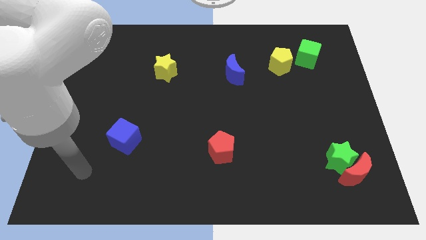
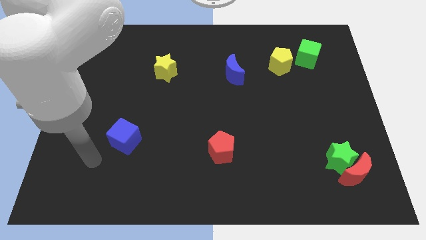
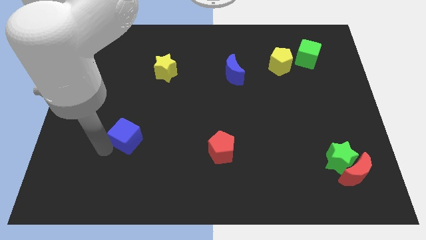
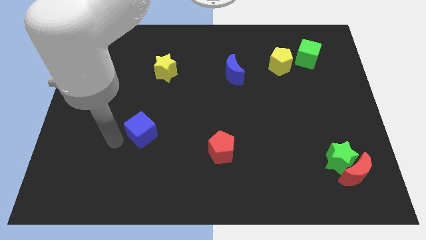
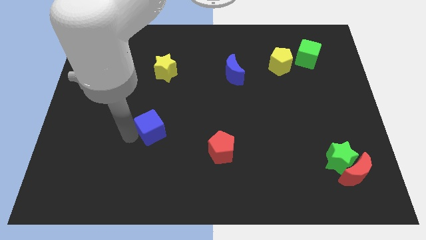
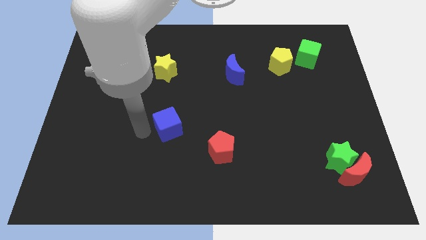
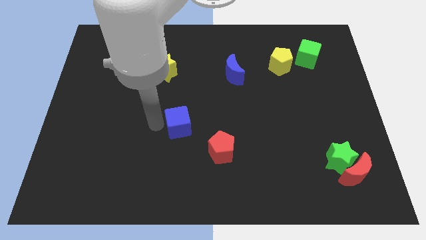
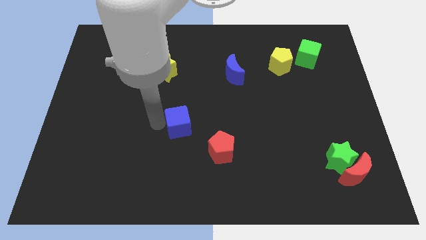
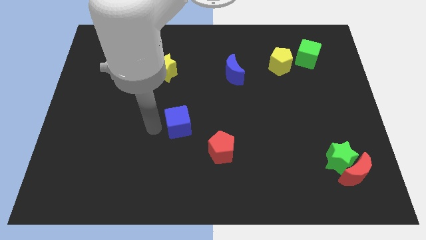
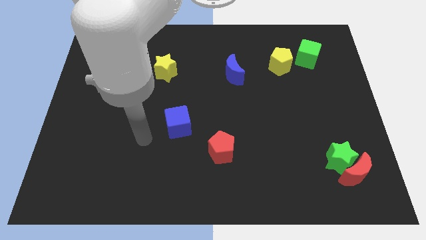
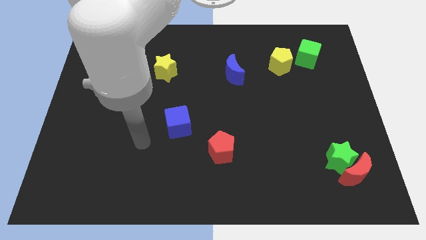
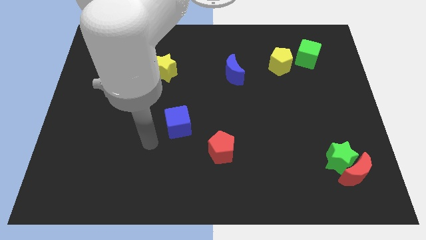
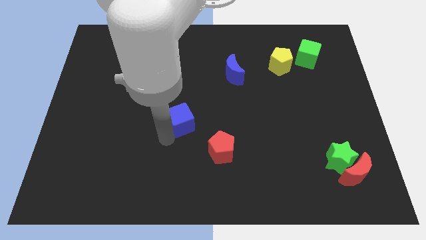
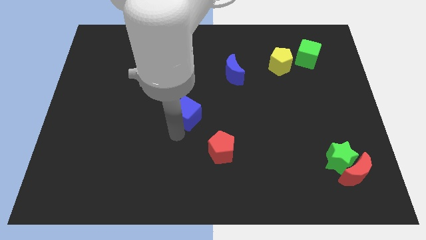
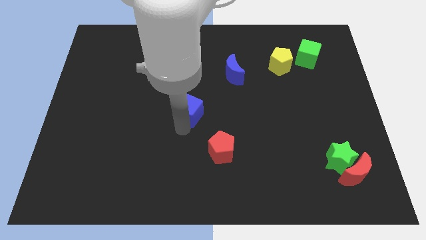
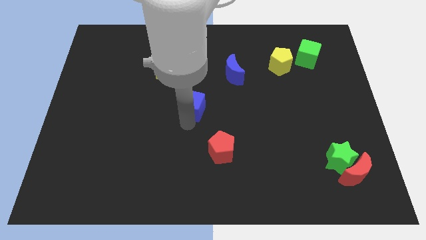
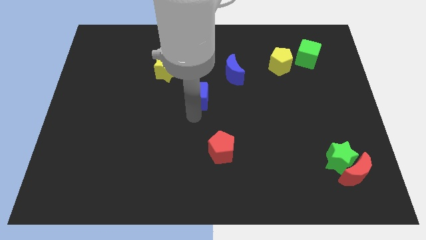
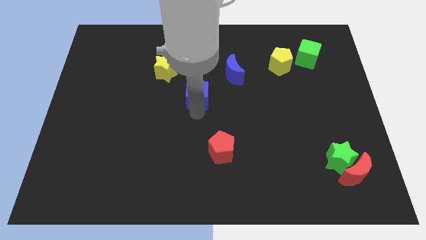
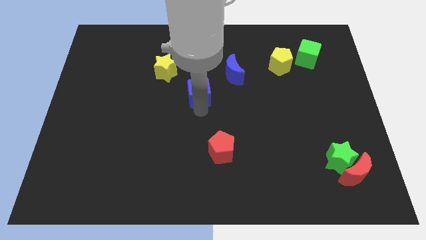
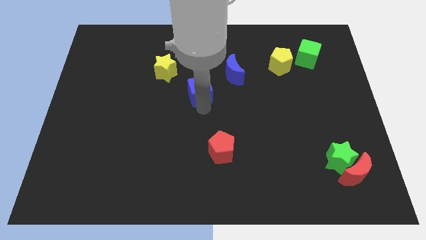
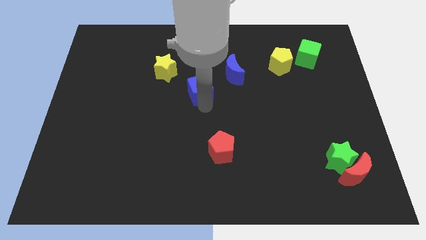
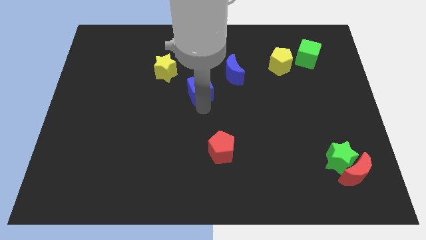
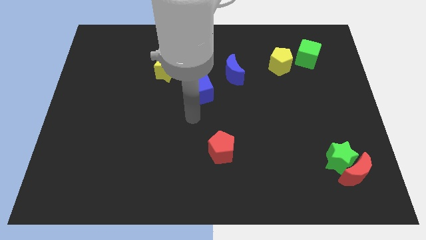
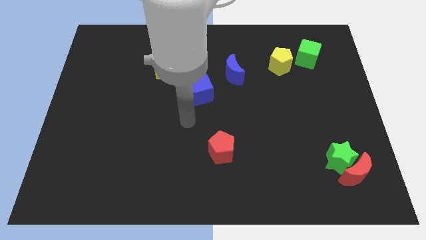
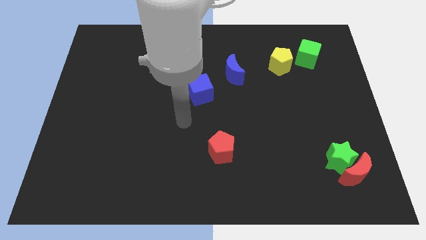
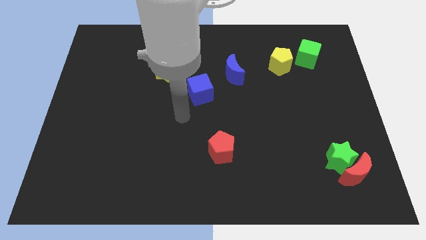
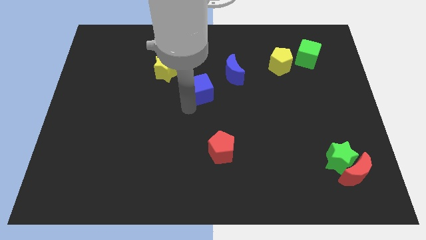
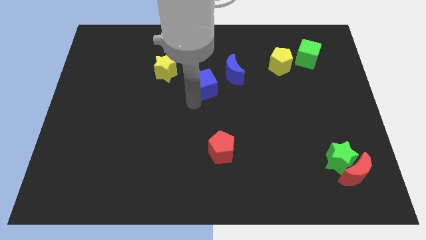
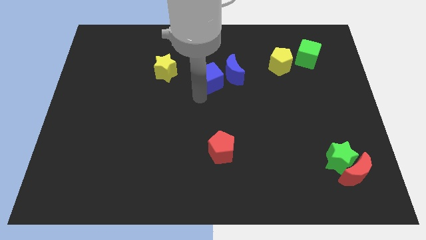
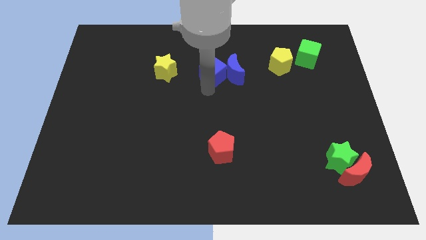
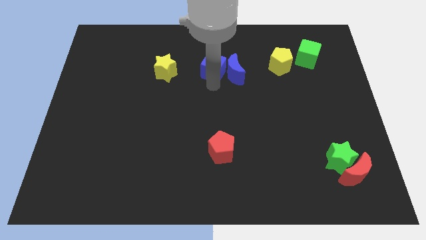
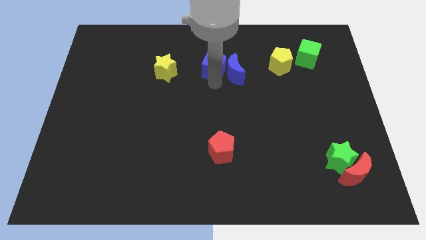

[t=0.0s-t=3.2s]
move the blue cube left to the blue moon

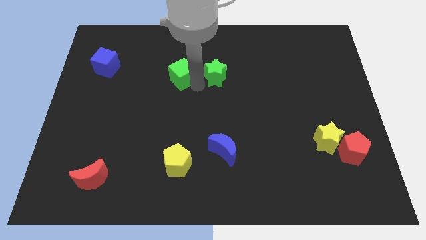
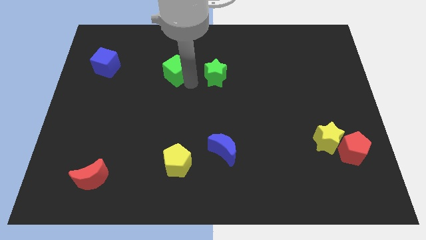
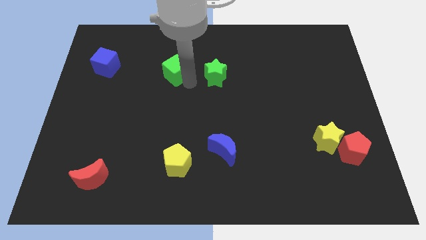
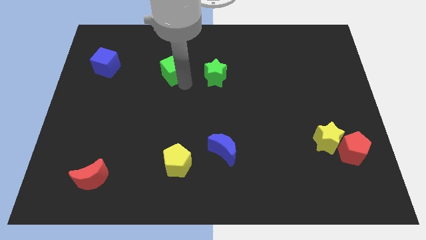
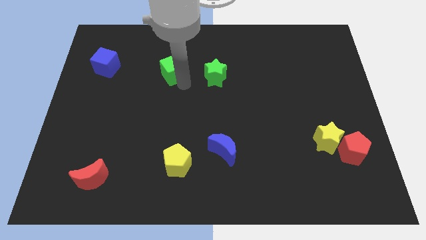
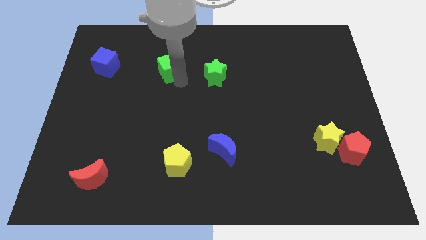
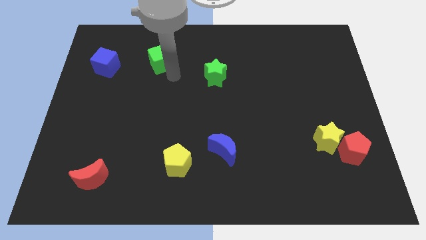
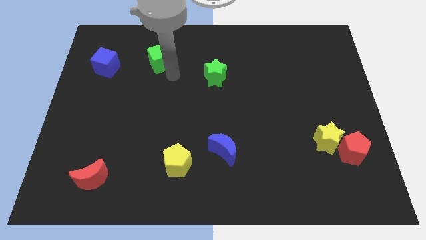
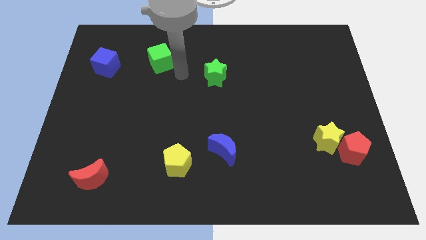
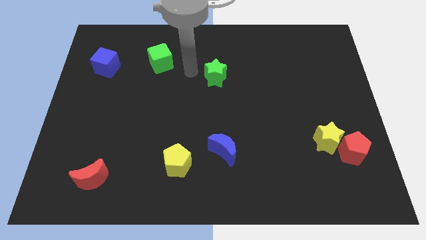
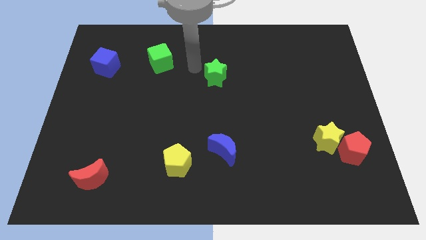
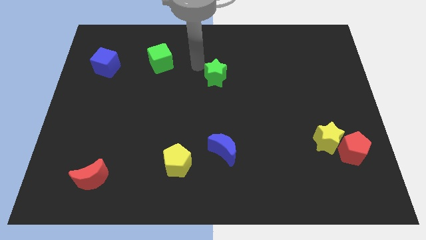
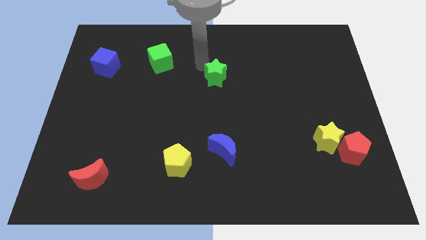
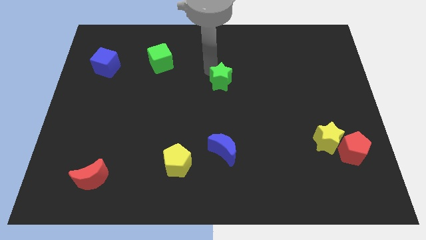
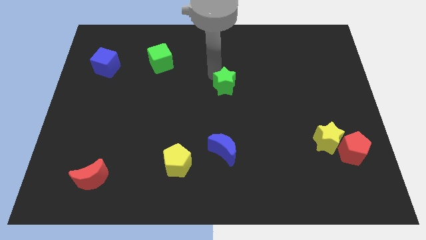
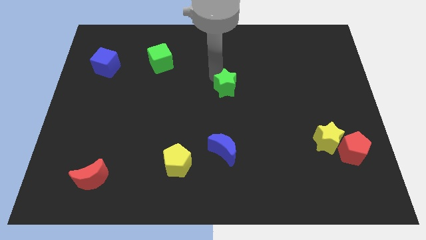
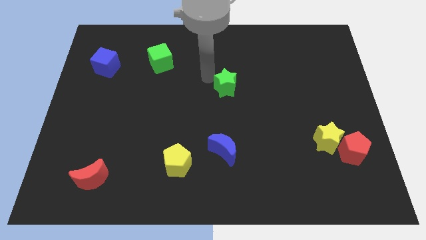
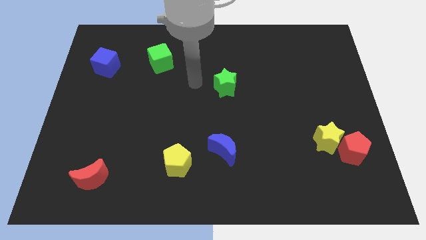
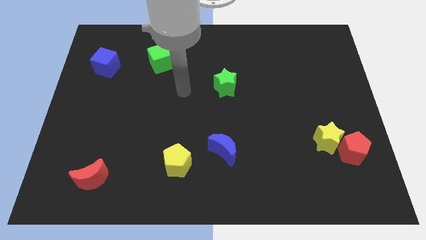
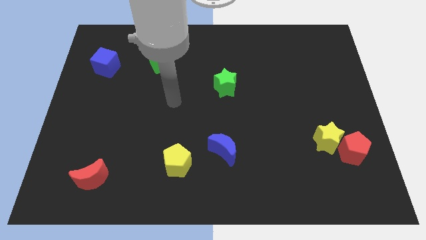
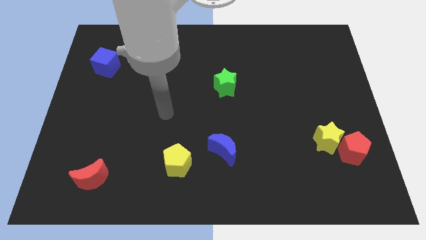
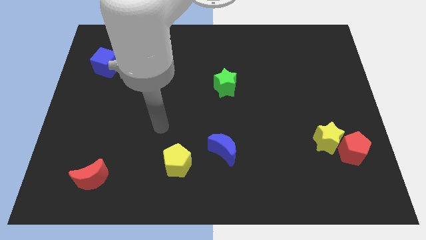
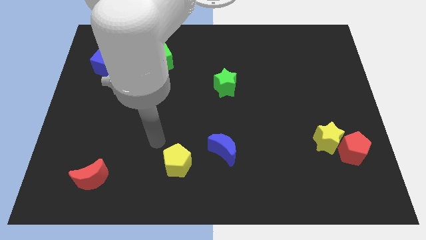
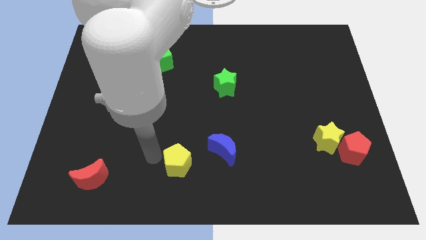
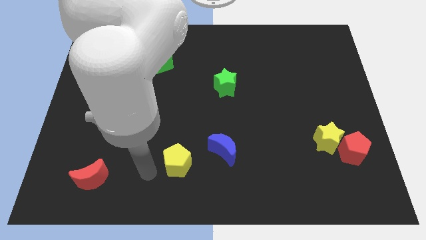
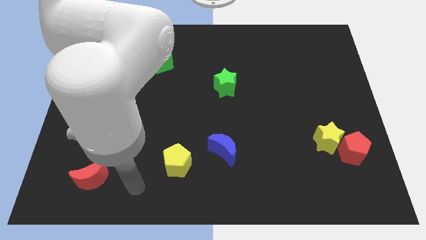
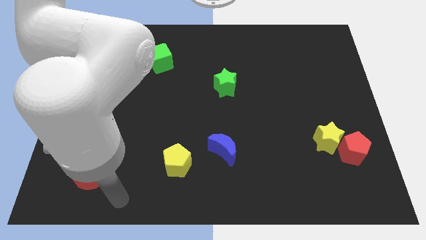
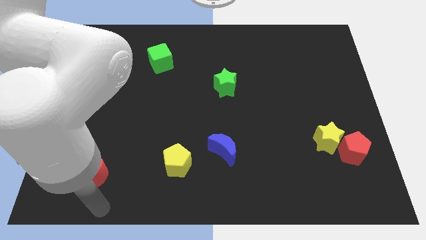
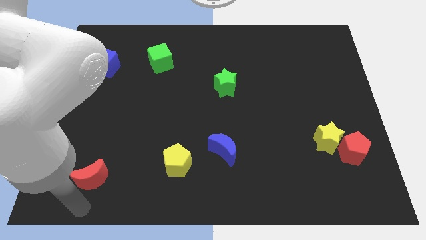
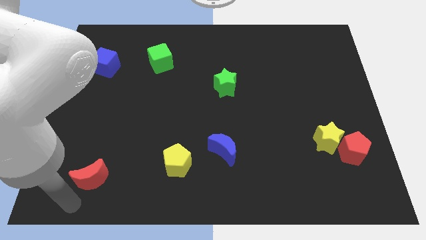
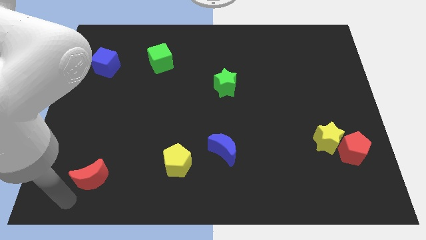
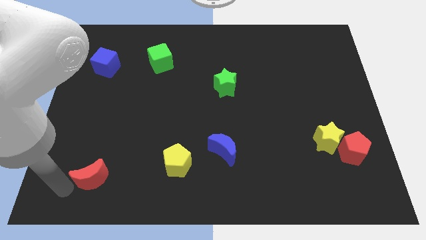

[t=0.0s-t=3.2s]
push both the green blocks diagonal to each other

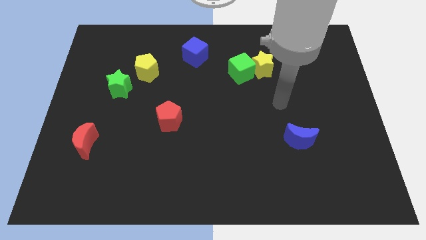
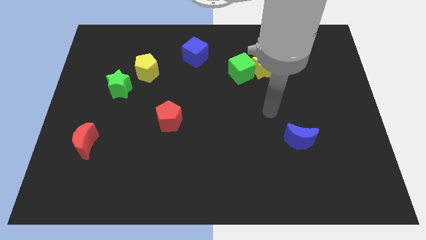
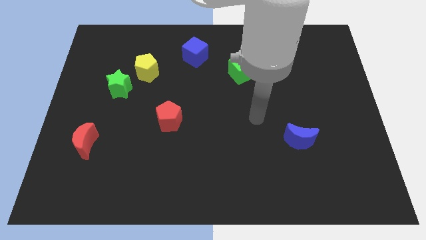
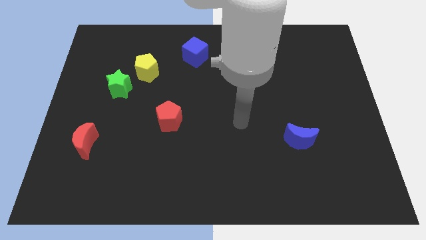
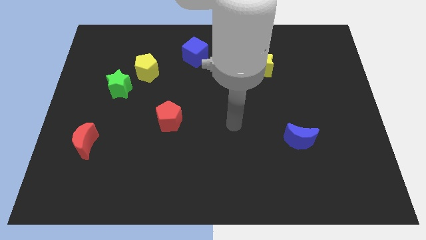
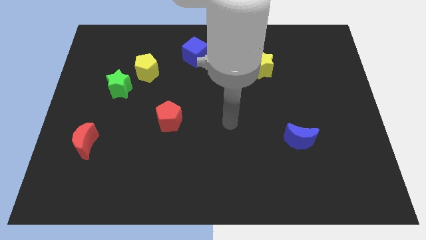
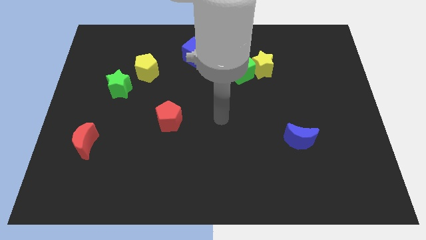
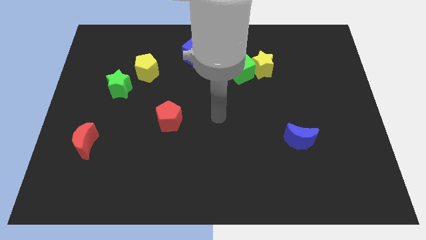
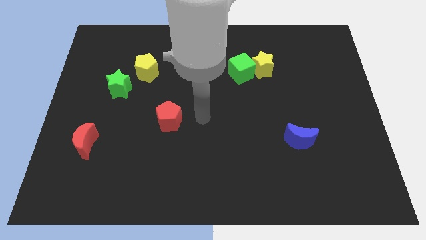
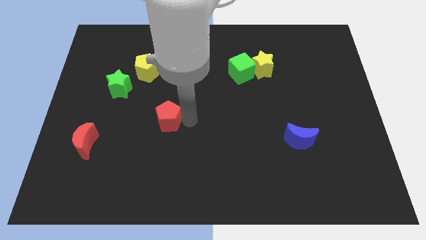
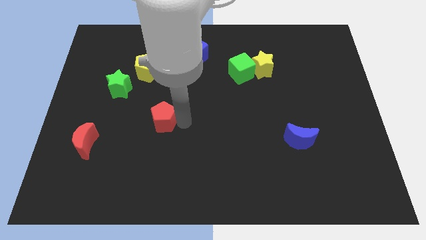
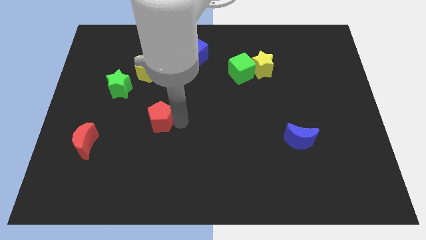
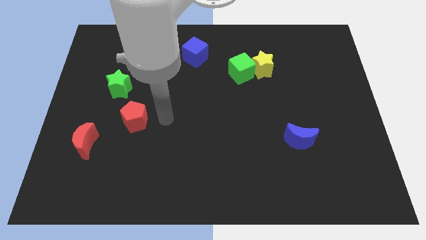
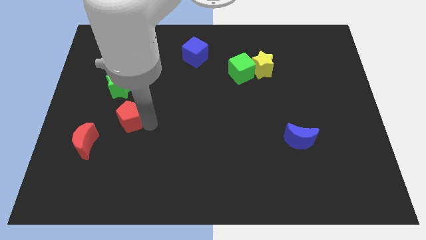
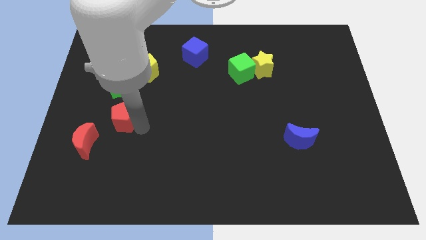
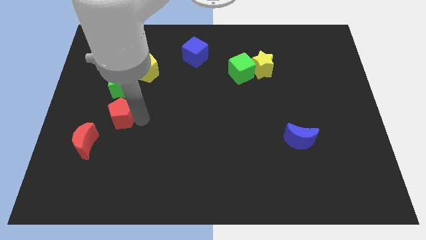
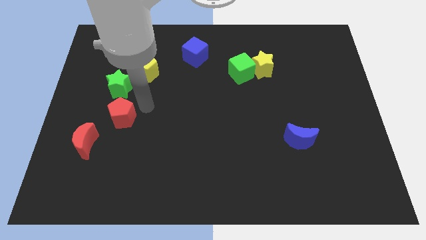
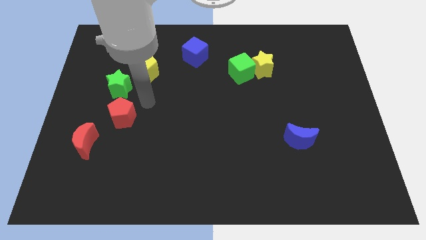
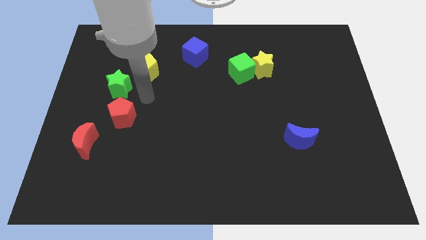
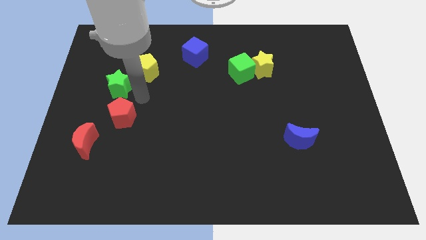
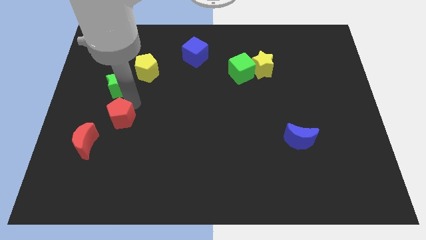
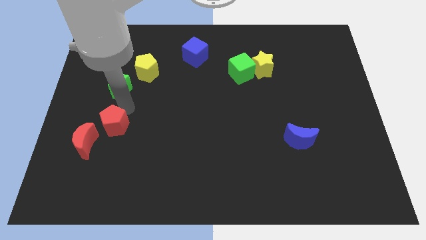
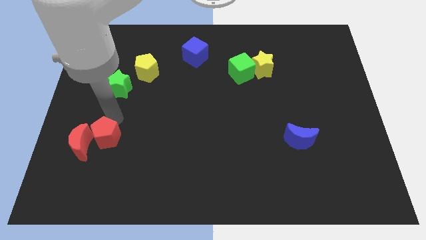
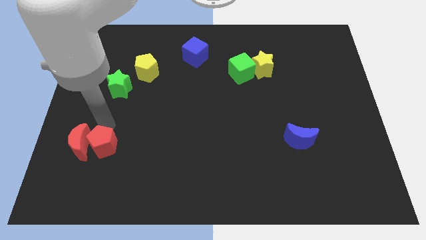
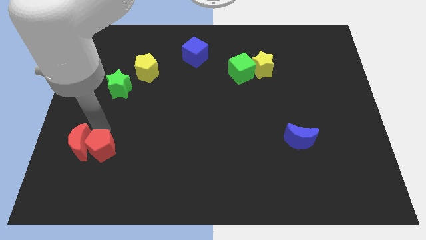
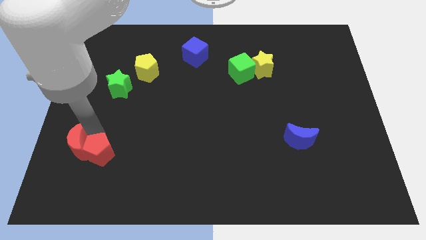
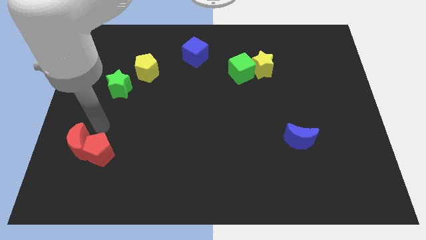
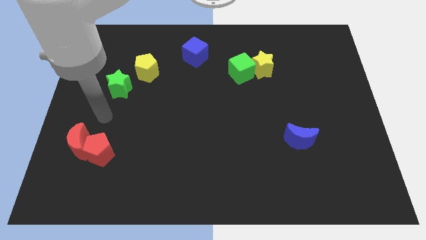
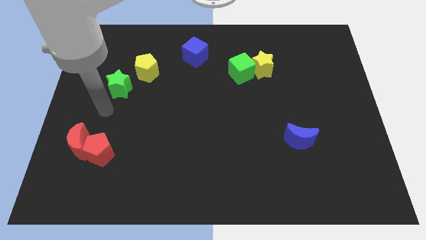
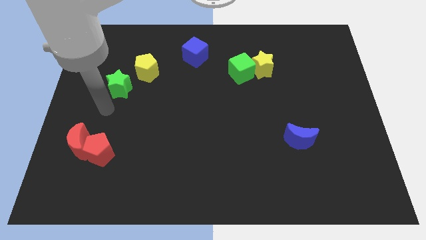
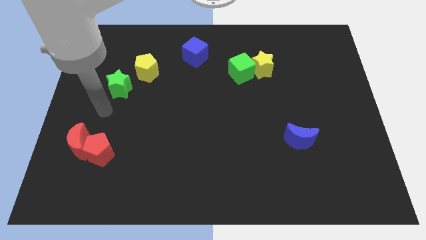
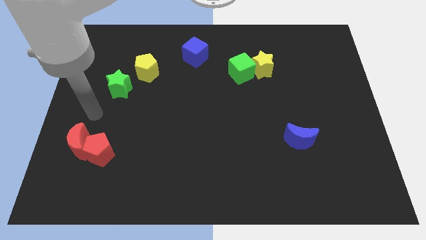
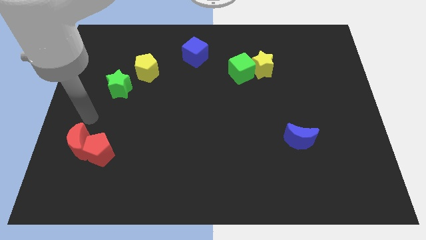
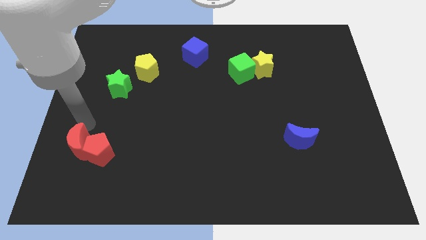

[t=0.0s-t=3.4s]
push the red pentagon into the red moon
